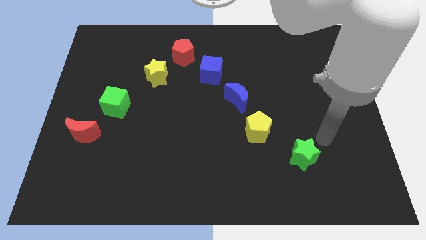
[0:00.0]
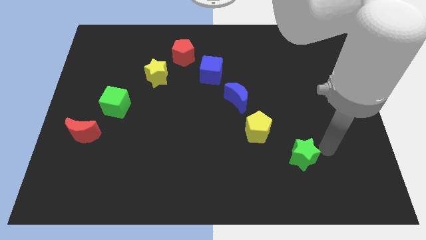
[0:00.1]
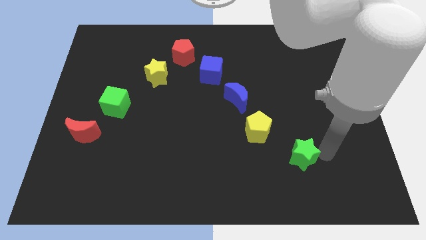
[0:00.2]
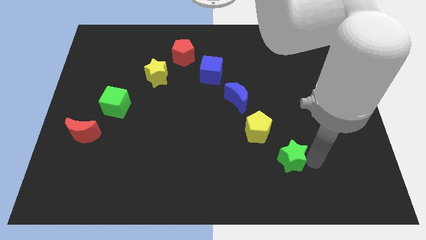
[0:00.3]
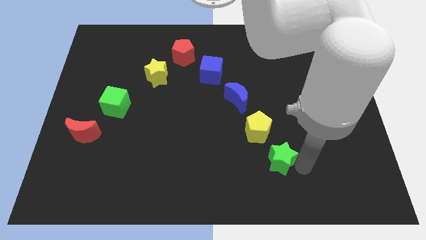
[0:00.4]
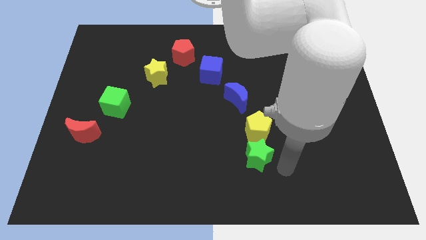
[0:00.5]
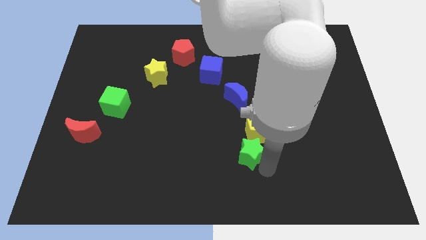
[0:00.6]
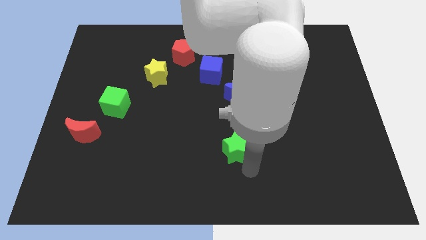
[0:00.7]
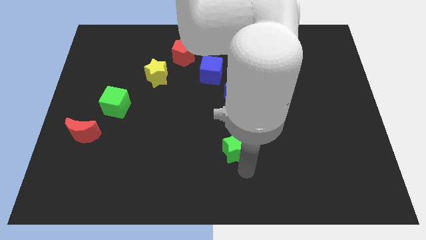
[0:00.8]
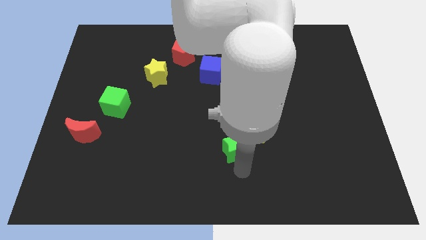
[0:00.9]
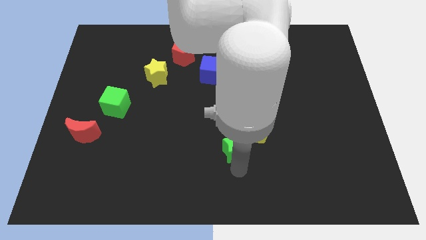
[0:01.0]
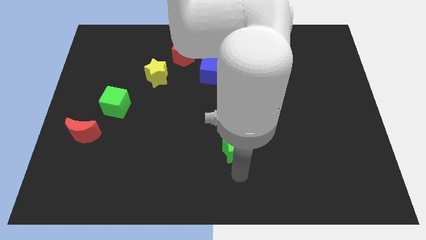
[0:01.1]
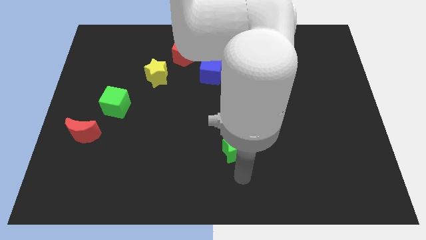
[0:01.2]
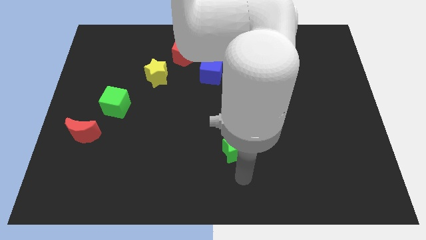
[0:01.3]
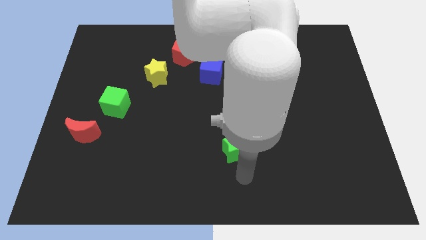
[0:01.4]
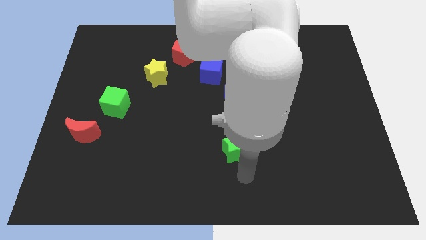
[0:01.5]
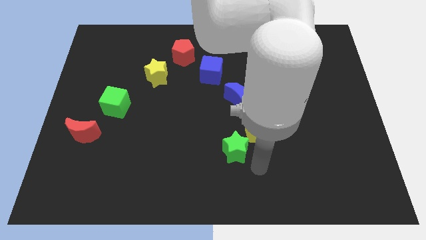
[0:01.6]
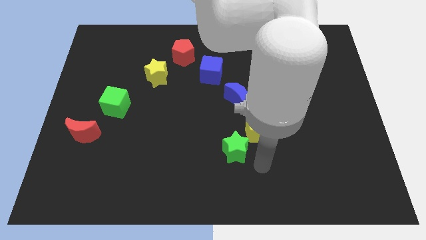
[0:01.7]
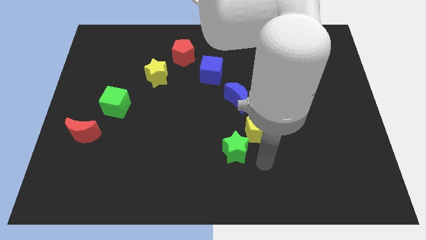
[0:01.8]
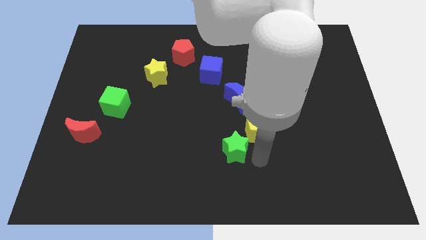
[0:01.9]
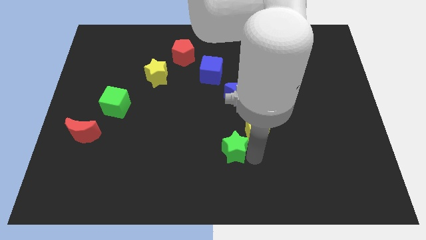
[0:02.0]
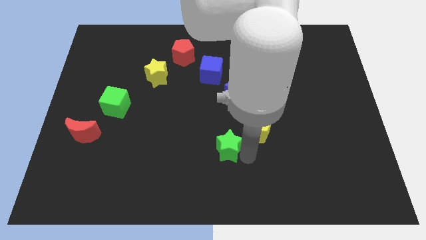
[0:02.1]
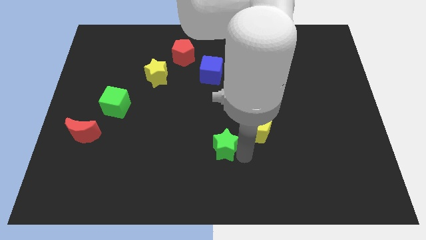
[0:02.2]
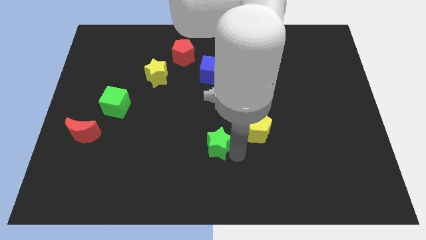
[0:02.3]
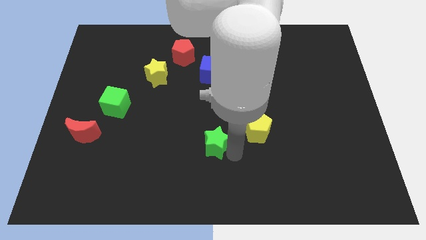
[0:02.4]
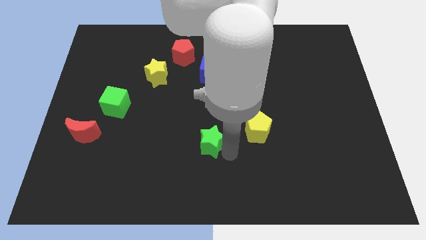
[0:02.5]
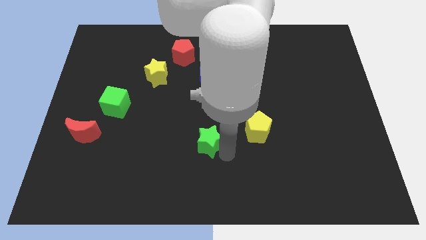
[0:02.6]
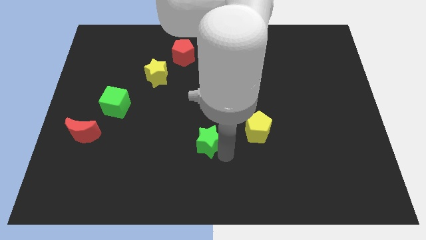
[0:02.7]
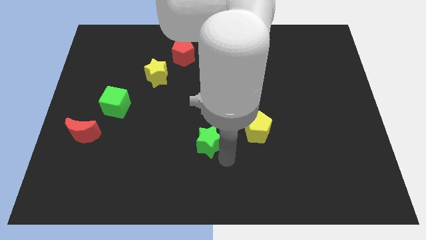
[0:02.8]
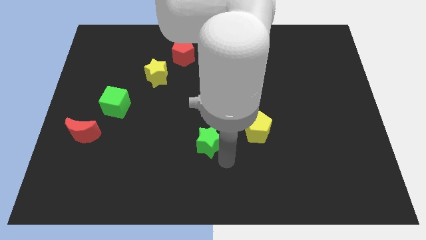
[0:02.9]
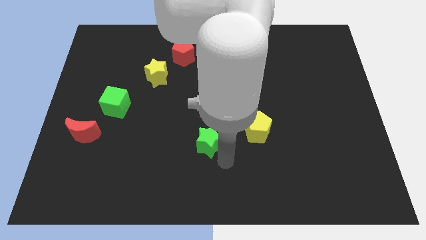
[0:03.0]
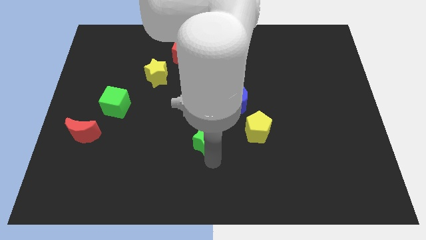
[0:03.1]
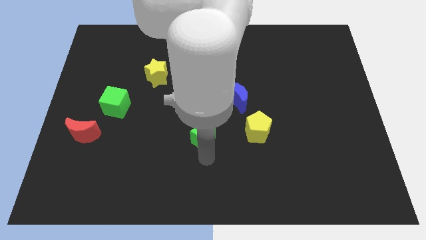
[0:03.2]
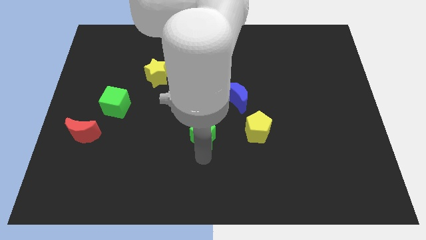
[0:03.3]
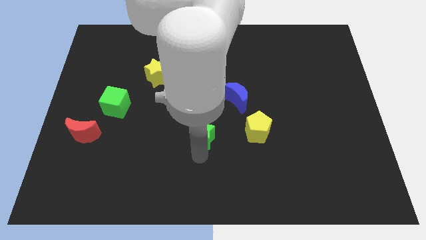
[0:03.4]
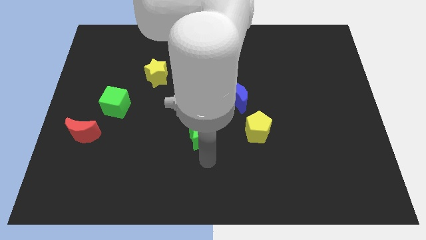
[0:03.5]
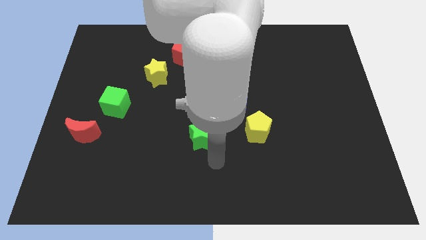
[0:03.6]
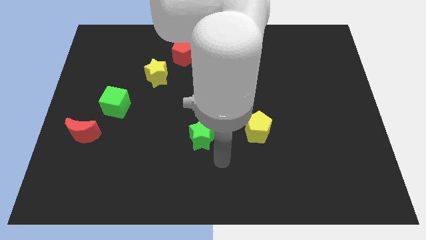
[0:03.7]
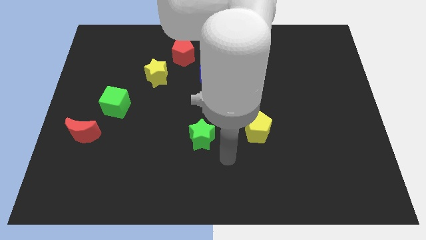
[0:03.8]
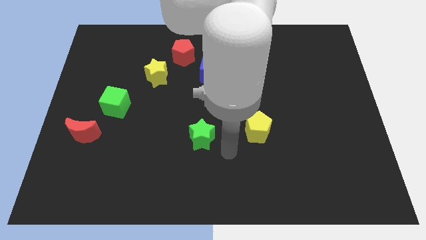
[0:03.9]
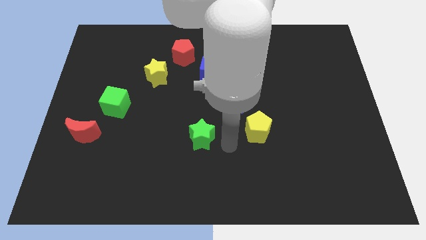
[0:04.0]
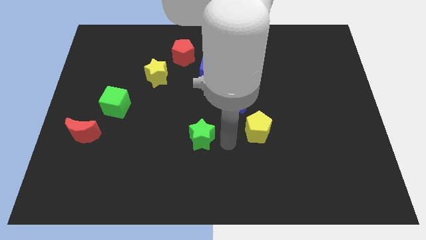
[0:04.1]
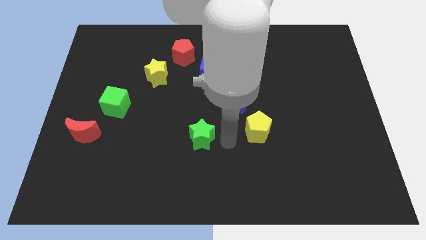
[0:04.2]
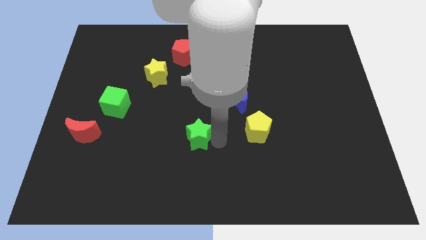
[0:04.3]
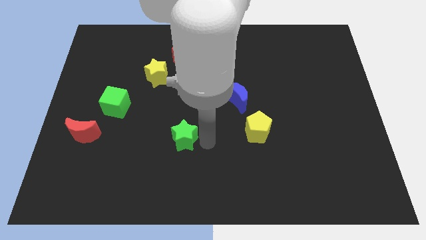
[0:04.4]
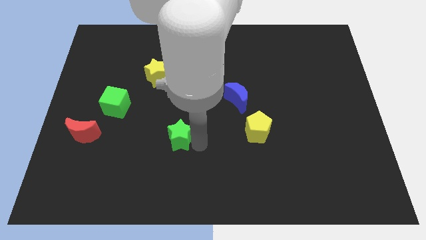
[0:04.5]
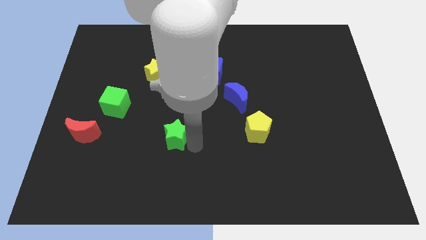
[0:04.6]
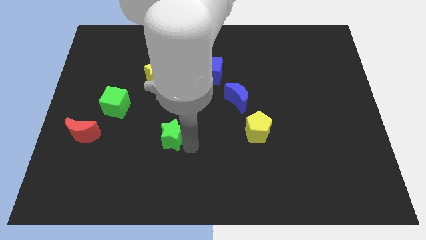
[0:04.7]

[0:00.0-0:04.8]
place the green star left to the yellow pentagon

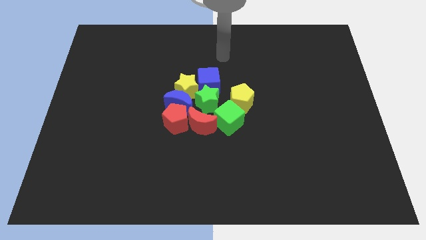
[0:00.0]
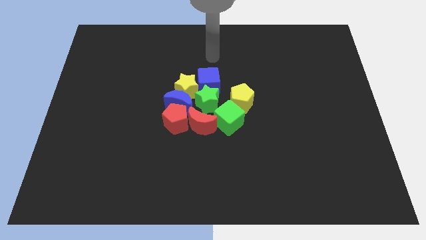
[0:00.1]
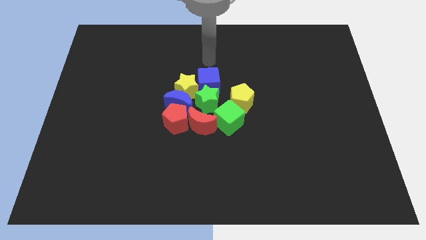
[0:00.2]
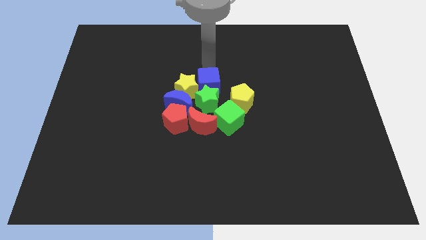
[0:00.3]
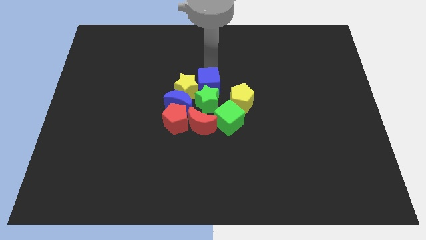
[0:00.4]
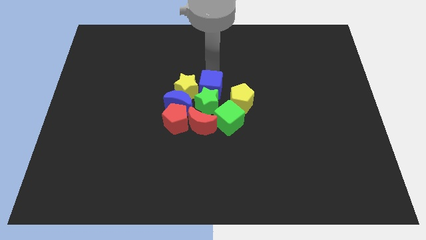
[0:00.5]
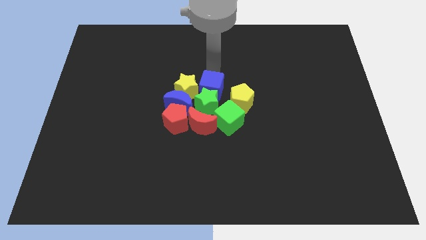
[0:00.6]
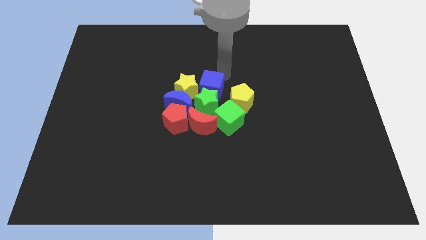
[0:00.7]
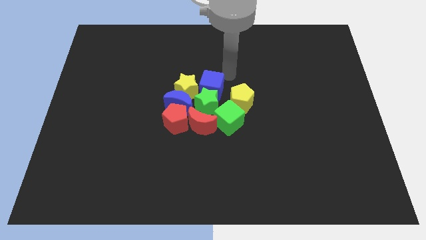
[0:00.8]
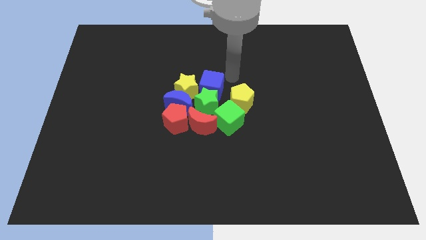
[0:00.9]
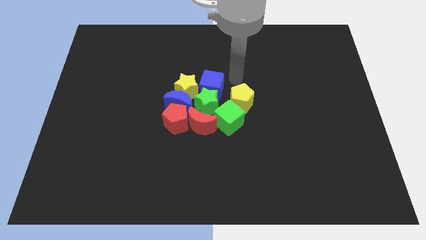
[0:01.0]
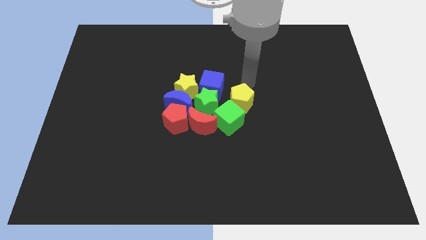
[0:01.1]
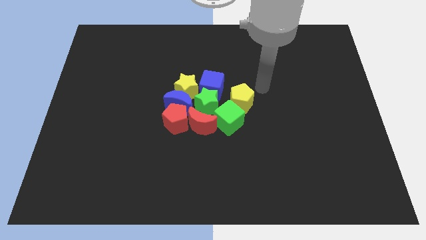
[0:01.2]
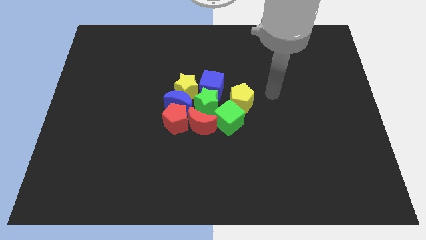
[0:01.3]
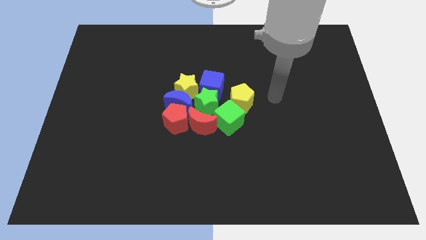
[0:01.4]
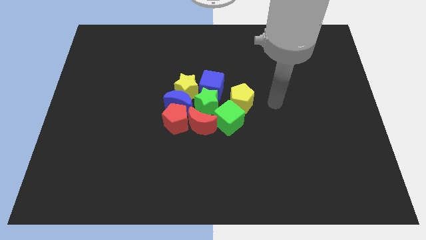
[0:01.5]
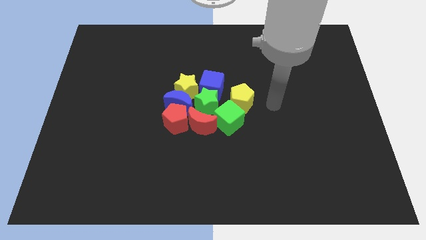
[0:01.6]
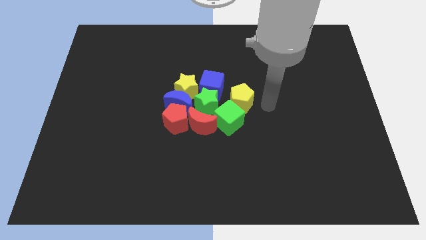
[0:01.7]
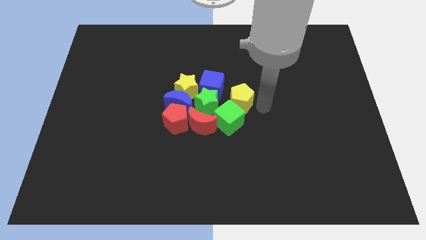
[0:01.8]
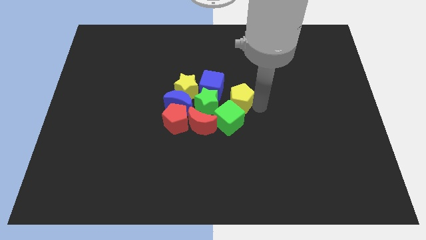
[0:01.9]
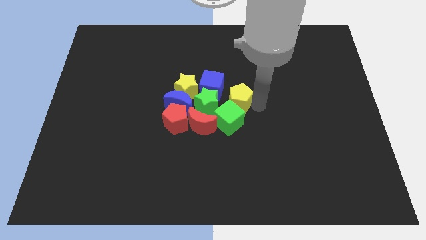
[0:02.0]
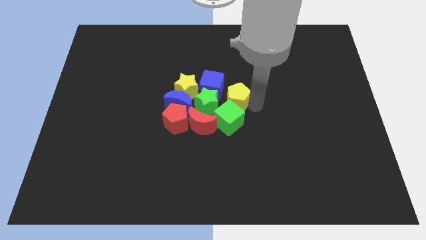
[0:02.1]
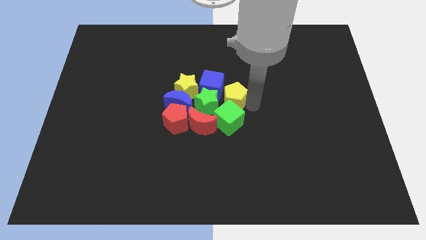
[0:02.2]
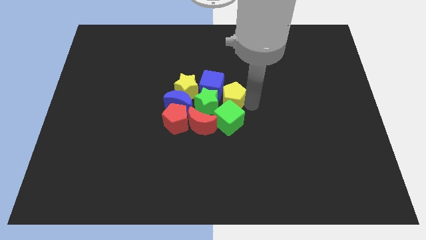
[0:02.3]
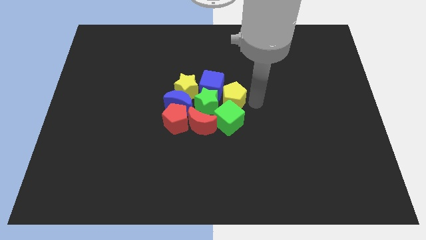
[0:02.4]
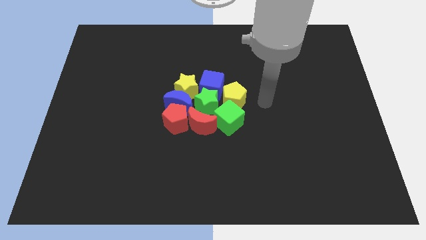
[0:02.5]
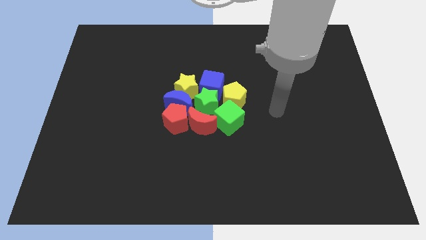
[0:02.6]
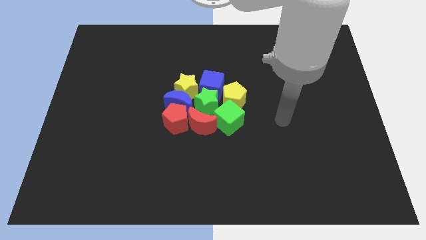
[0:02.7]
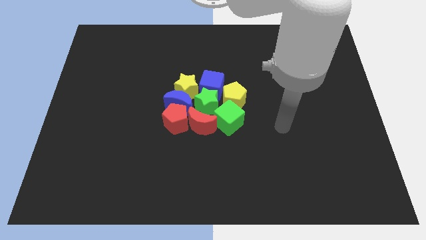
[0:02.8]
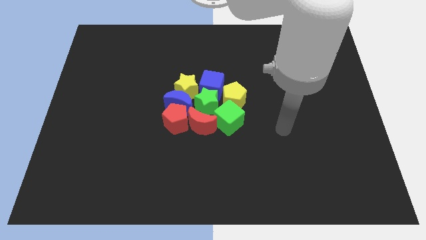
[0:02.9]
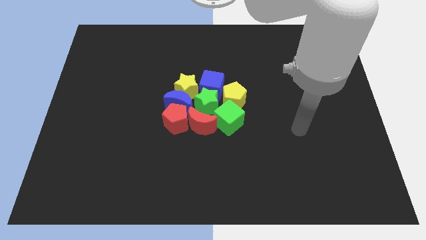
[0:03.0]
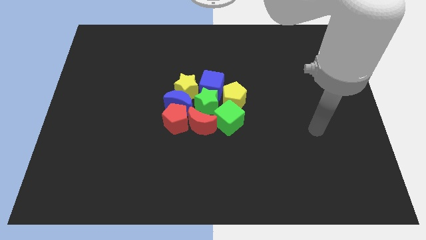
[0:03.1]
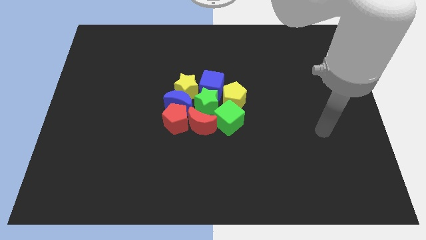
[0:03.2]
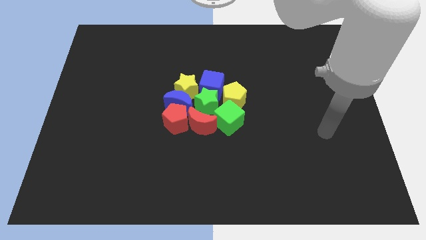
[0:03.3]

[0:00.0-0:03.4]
move your arm away from the blue cube

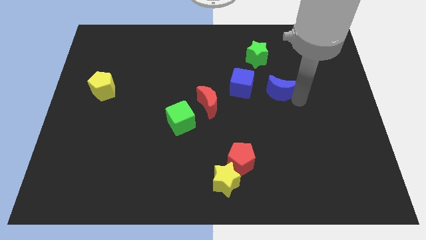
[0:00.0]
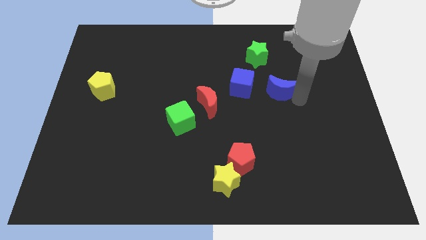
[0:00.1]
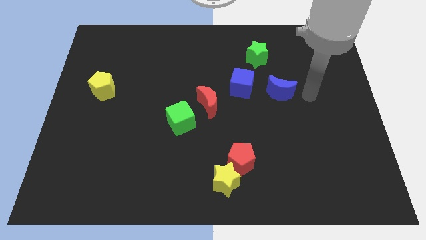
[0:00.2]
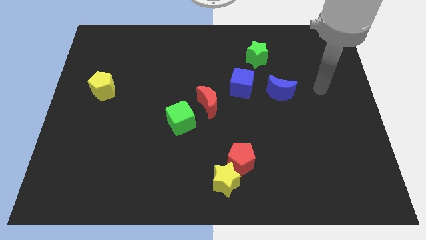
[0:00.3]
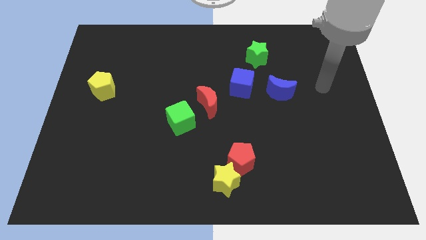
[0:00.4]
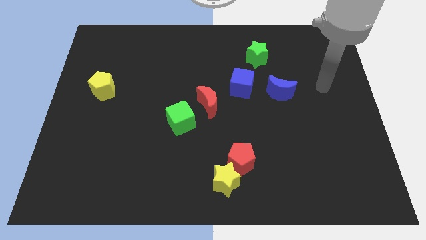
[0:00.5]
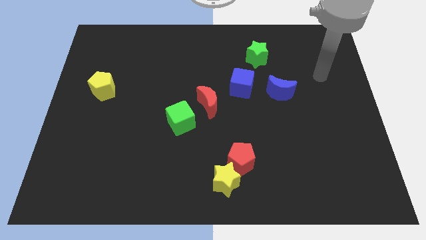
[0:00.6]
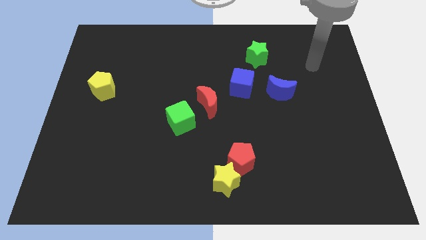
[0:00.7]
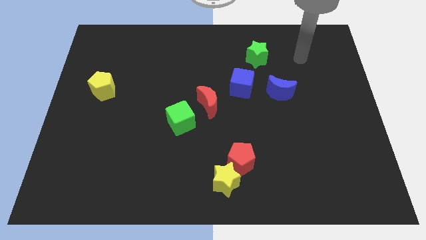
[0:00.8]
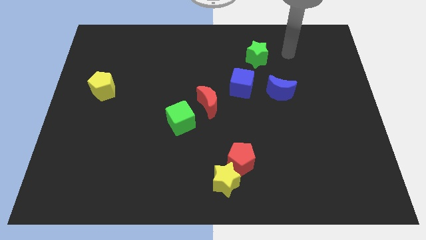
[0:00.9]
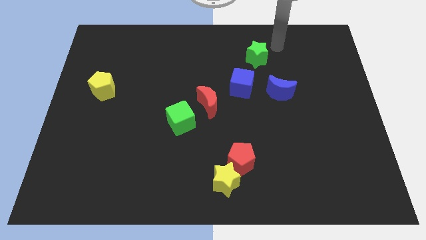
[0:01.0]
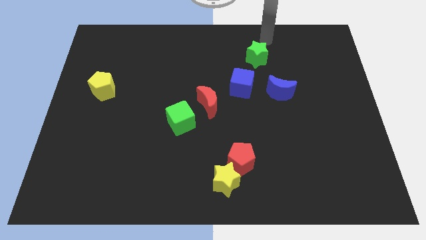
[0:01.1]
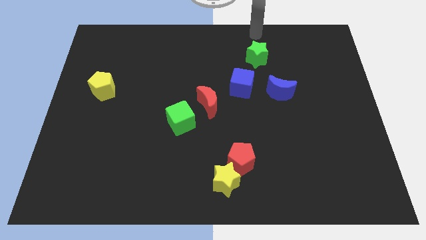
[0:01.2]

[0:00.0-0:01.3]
move your arm towards the green star
